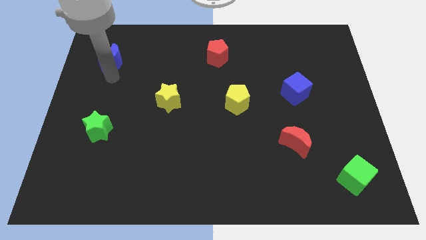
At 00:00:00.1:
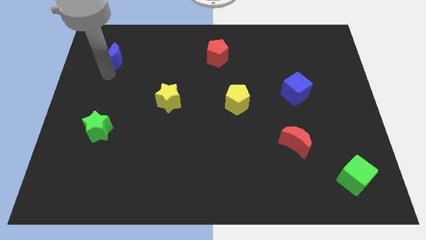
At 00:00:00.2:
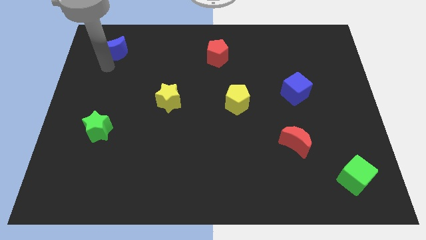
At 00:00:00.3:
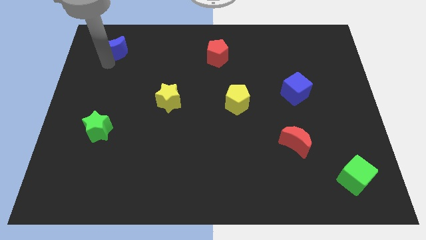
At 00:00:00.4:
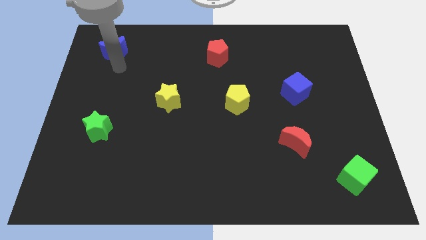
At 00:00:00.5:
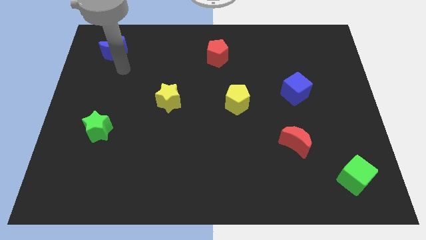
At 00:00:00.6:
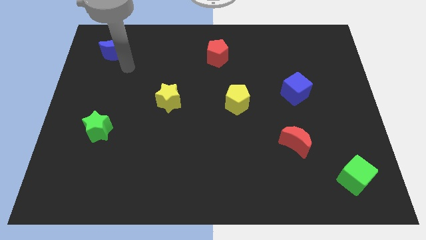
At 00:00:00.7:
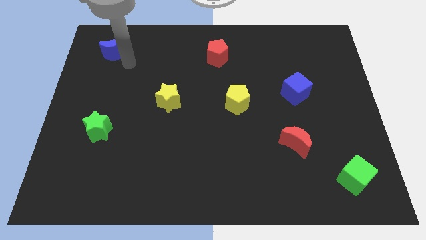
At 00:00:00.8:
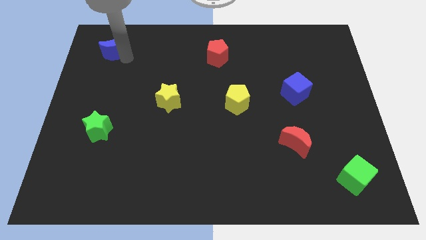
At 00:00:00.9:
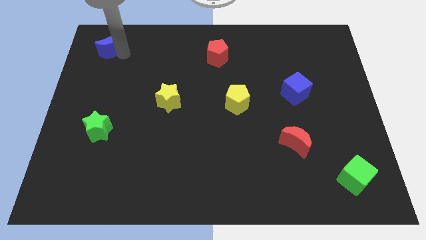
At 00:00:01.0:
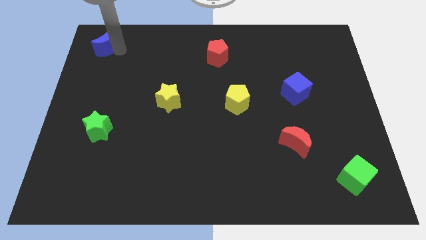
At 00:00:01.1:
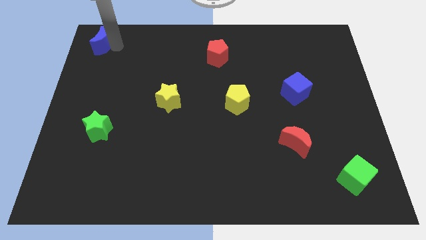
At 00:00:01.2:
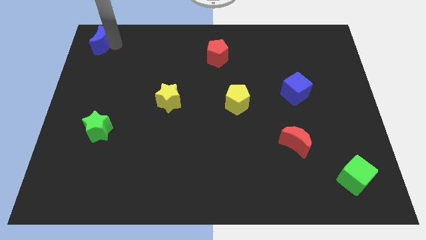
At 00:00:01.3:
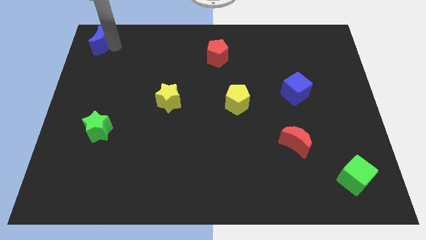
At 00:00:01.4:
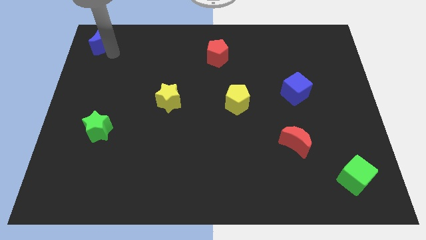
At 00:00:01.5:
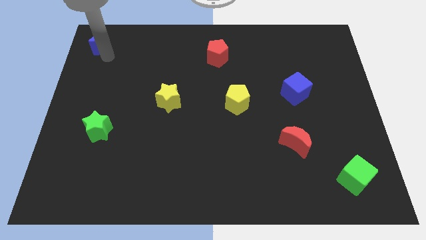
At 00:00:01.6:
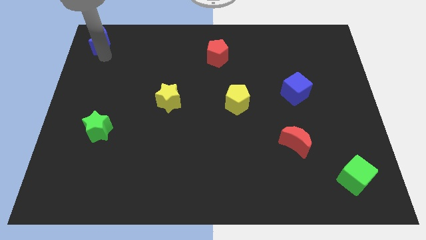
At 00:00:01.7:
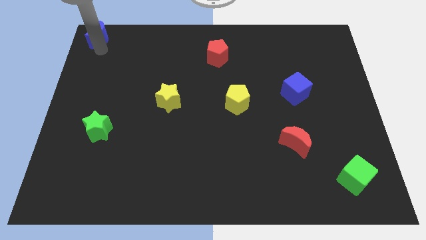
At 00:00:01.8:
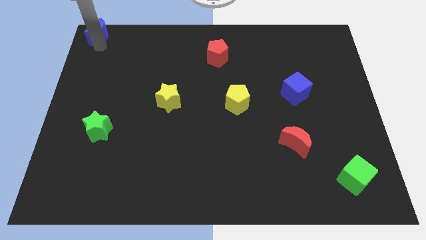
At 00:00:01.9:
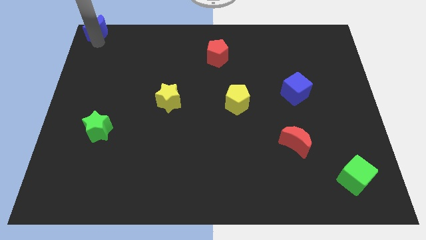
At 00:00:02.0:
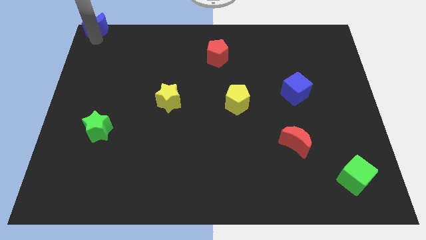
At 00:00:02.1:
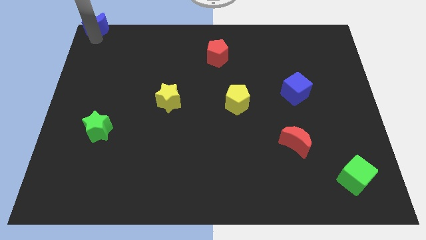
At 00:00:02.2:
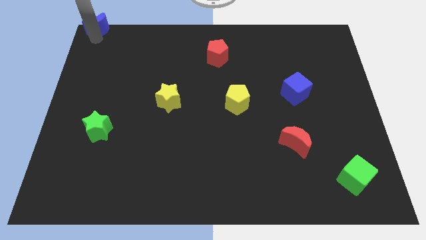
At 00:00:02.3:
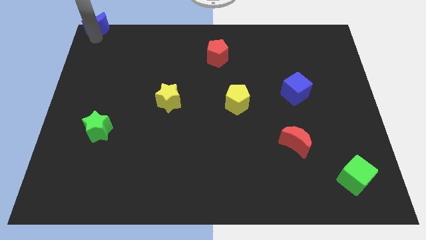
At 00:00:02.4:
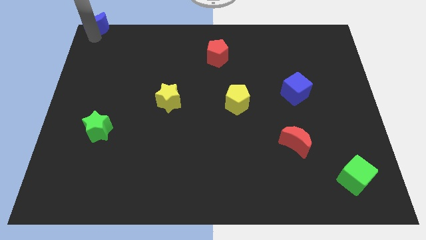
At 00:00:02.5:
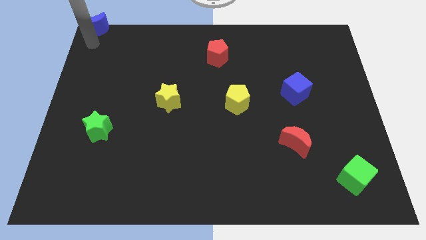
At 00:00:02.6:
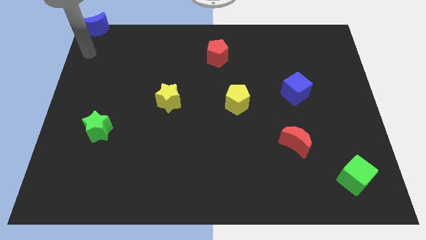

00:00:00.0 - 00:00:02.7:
place the blue moon to the top left corner side

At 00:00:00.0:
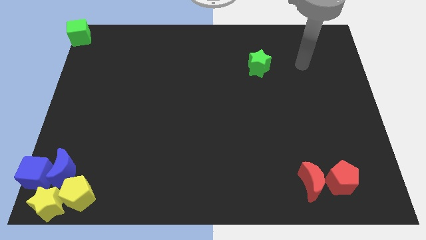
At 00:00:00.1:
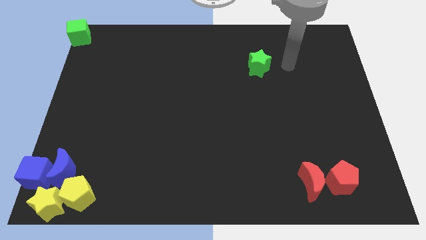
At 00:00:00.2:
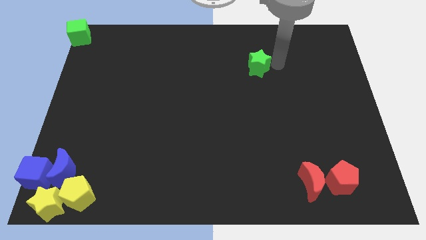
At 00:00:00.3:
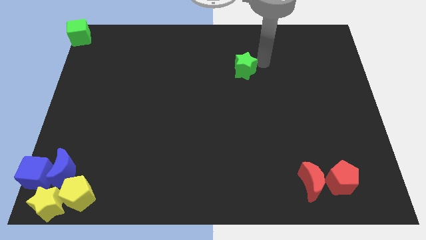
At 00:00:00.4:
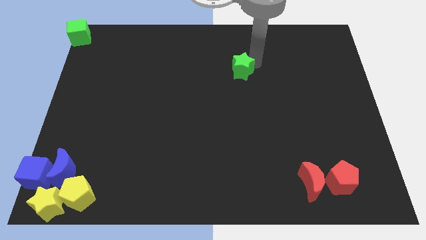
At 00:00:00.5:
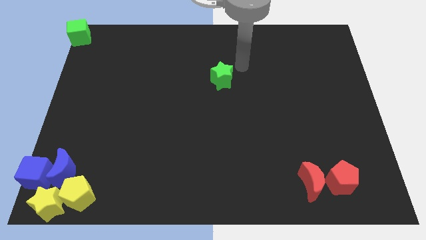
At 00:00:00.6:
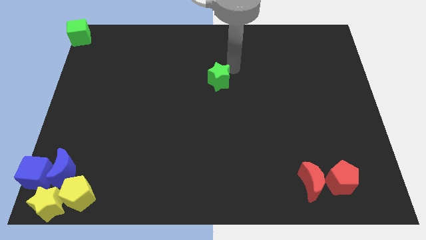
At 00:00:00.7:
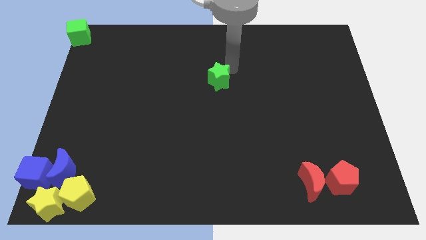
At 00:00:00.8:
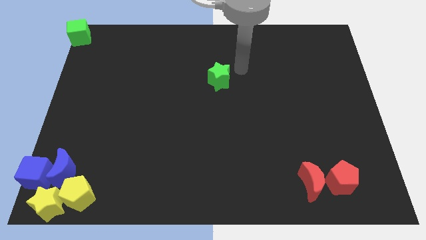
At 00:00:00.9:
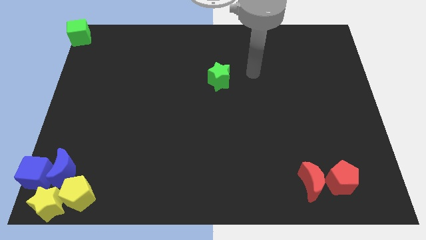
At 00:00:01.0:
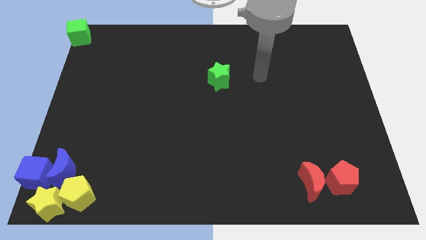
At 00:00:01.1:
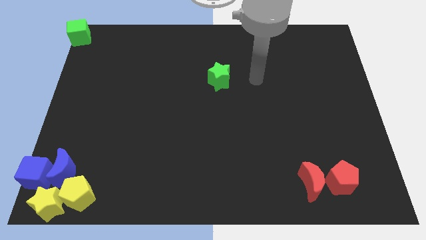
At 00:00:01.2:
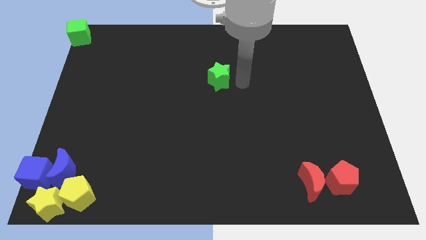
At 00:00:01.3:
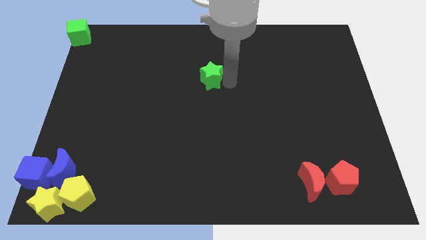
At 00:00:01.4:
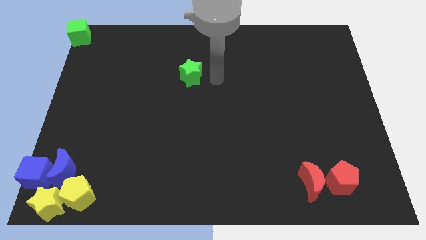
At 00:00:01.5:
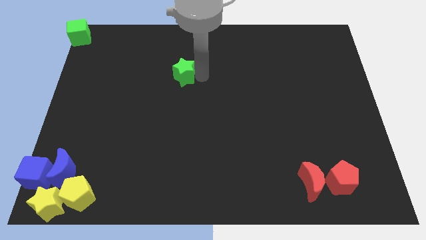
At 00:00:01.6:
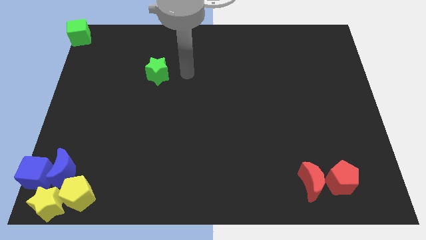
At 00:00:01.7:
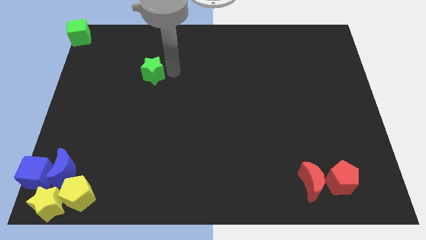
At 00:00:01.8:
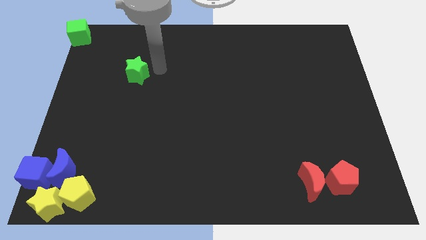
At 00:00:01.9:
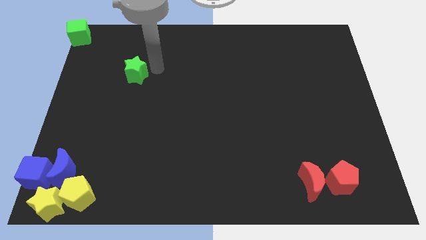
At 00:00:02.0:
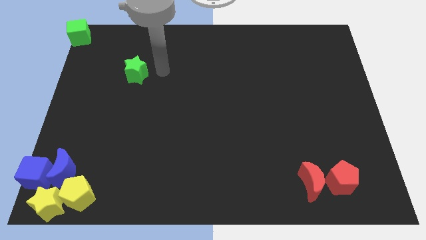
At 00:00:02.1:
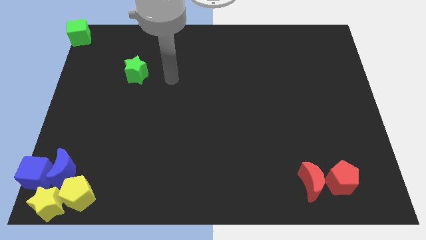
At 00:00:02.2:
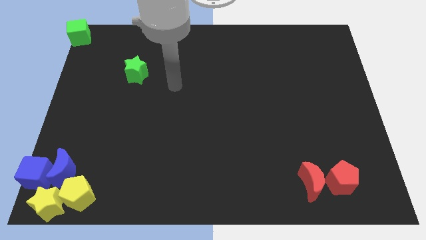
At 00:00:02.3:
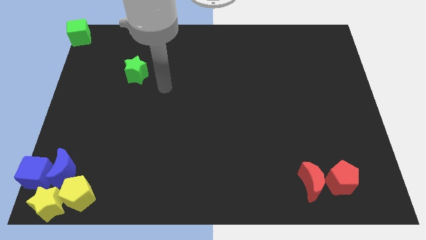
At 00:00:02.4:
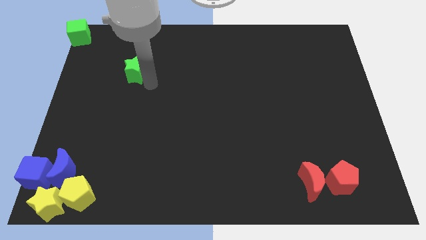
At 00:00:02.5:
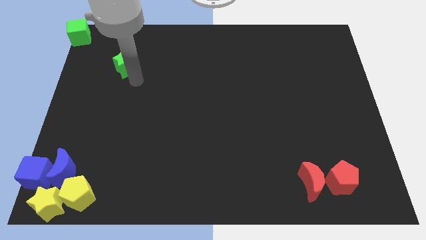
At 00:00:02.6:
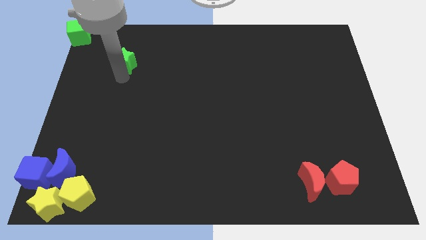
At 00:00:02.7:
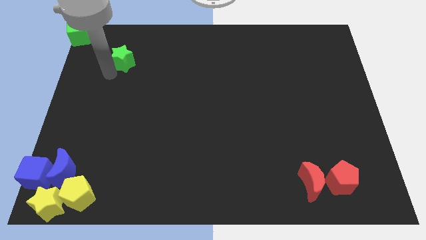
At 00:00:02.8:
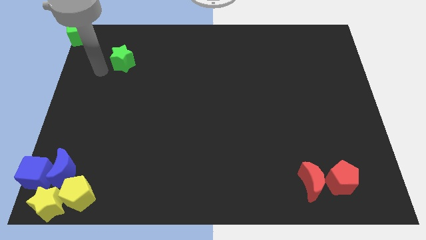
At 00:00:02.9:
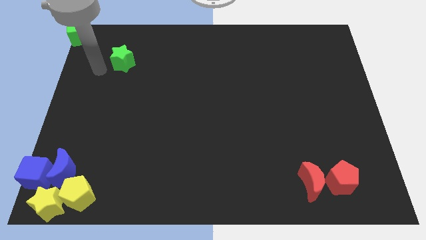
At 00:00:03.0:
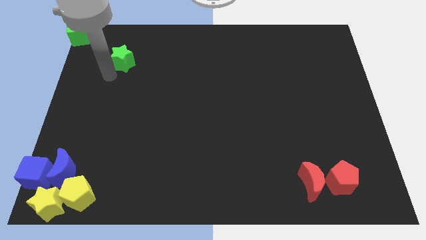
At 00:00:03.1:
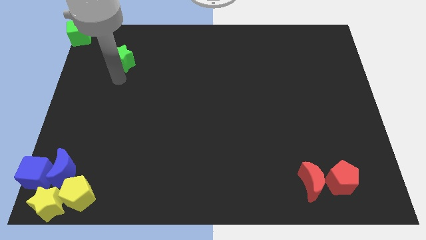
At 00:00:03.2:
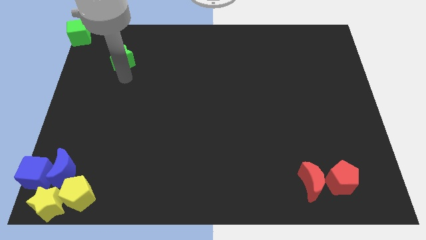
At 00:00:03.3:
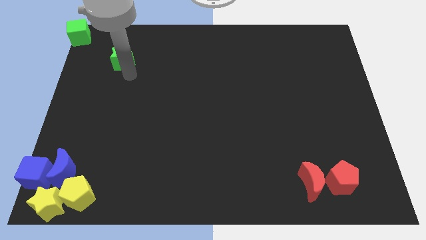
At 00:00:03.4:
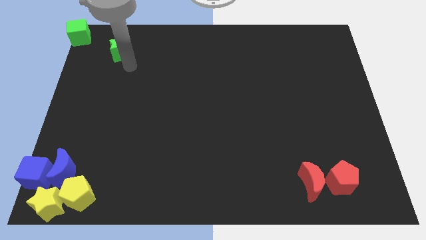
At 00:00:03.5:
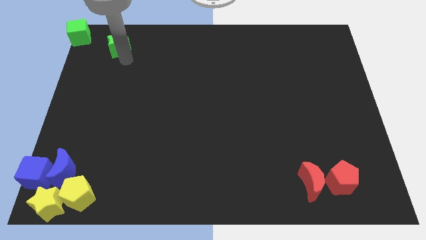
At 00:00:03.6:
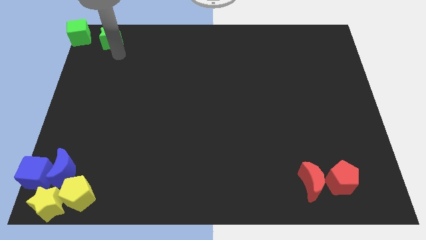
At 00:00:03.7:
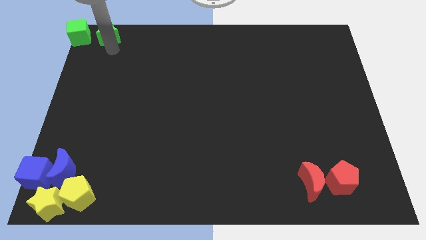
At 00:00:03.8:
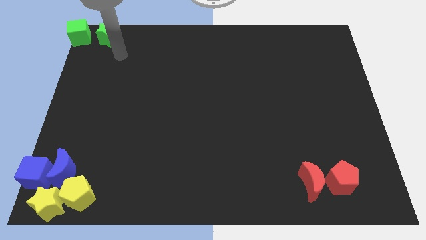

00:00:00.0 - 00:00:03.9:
move the green star towards the right side of the green cube

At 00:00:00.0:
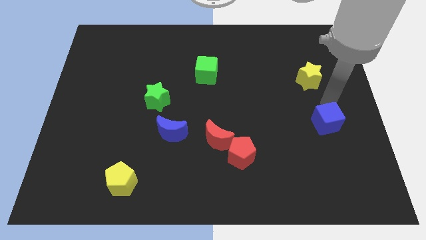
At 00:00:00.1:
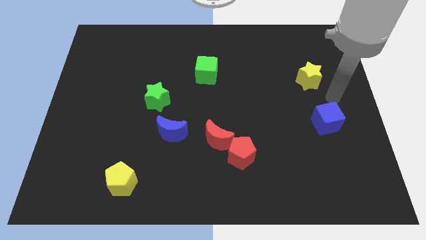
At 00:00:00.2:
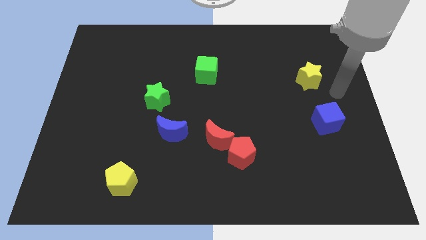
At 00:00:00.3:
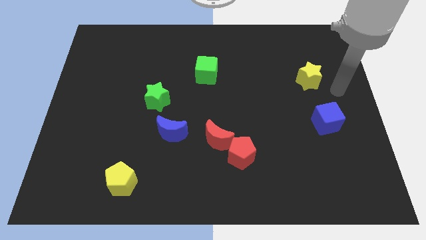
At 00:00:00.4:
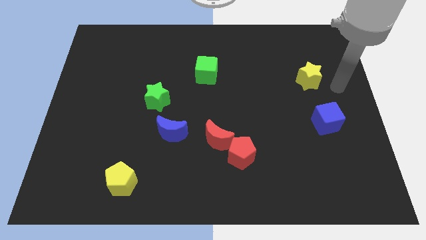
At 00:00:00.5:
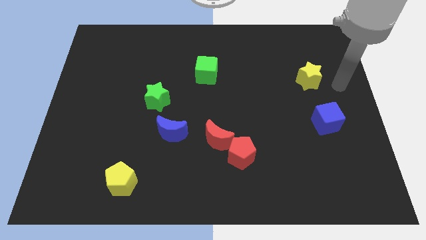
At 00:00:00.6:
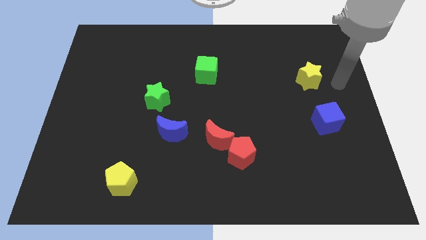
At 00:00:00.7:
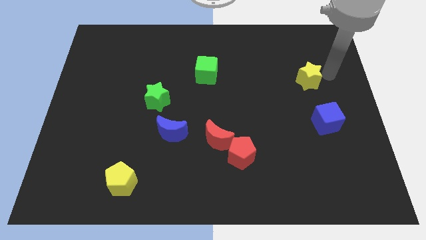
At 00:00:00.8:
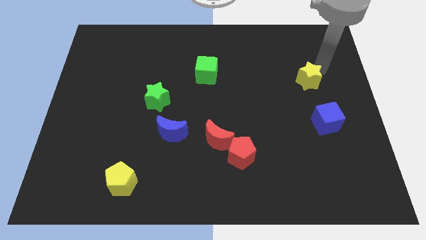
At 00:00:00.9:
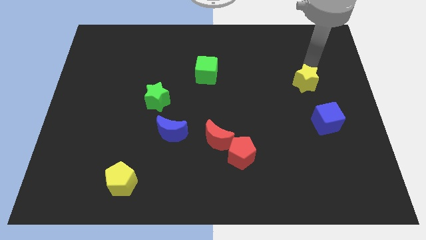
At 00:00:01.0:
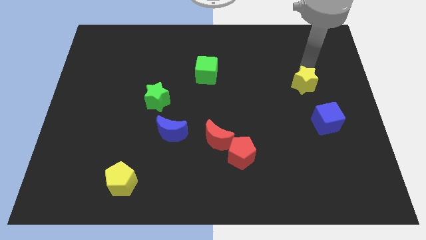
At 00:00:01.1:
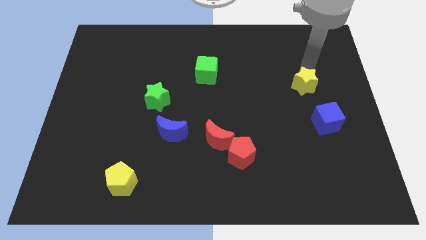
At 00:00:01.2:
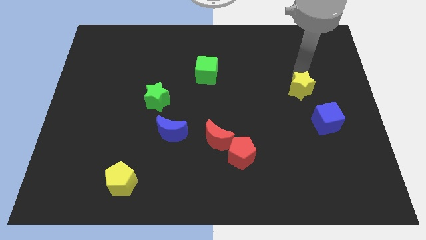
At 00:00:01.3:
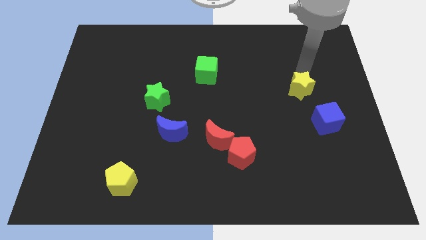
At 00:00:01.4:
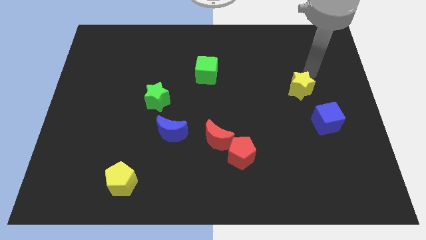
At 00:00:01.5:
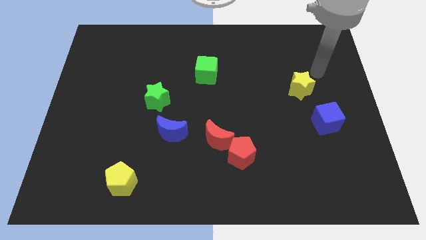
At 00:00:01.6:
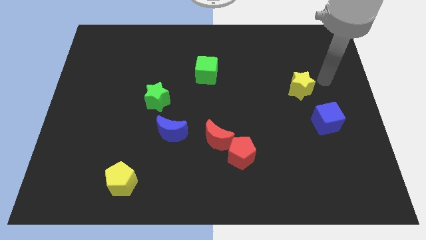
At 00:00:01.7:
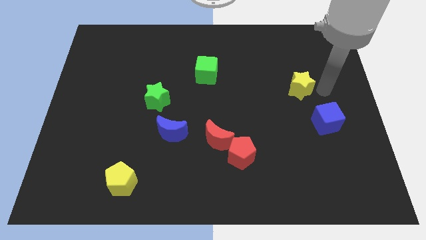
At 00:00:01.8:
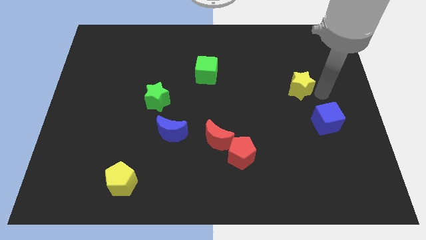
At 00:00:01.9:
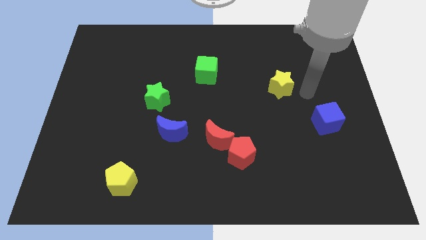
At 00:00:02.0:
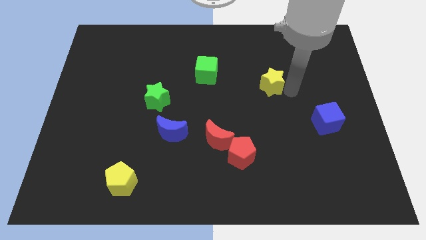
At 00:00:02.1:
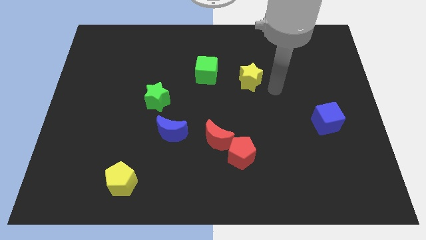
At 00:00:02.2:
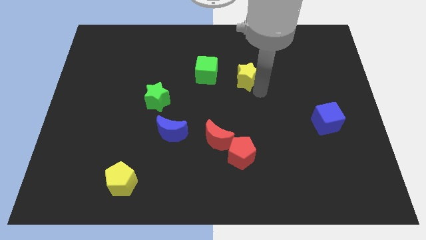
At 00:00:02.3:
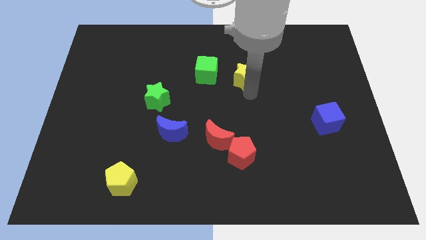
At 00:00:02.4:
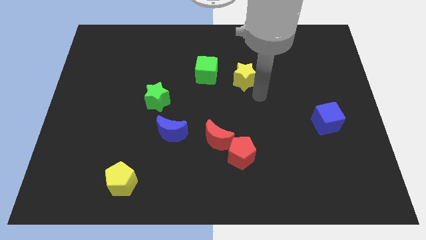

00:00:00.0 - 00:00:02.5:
push the yellow star towards the green cube
